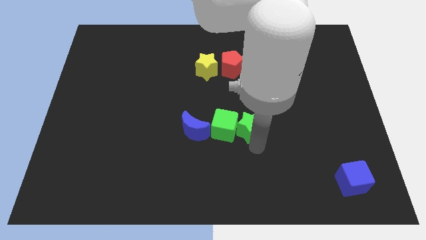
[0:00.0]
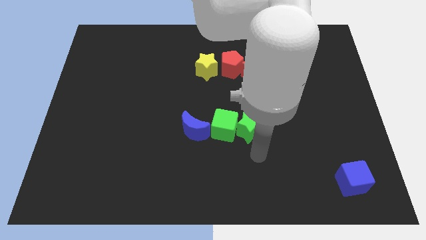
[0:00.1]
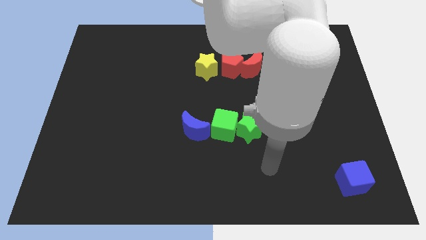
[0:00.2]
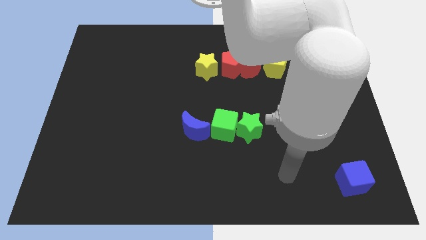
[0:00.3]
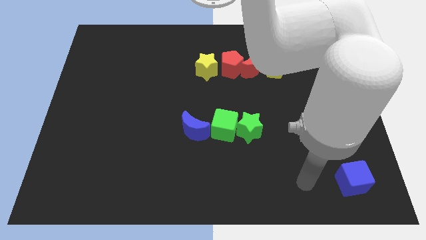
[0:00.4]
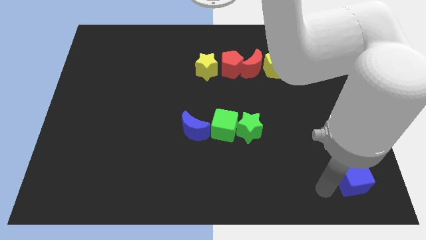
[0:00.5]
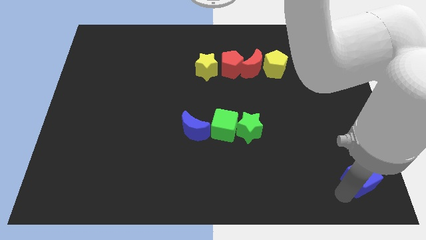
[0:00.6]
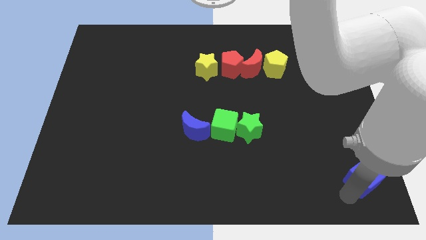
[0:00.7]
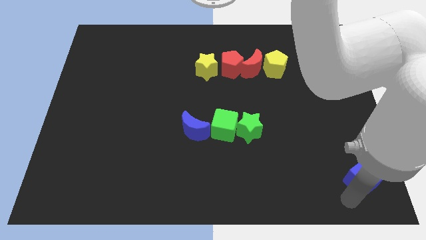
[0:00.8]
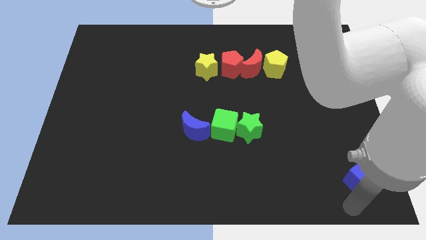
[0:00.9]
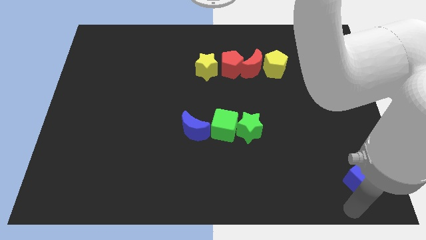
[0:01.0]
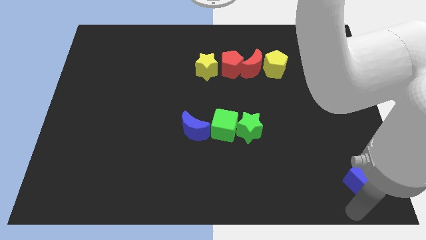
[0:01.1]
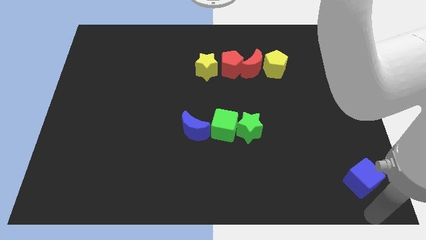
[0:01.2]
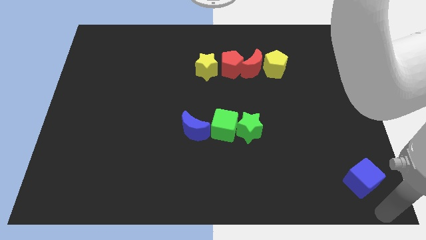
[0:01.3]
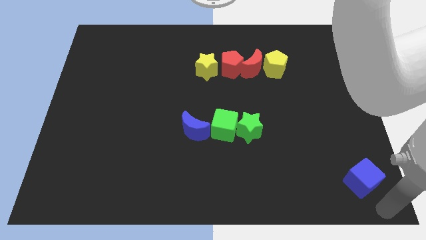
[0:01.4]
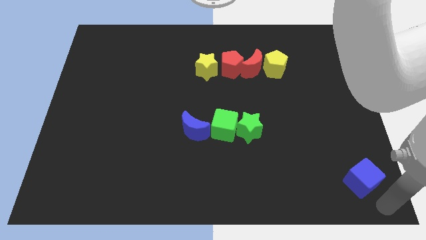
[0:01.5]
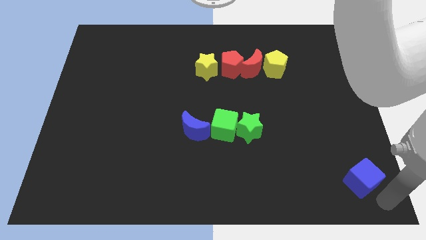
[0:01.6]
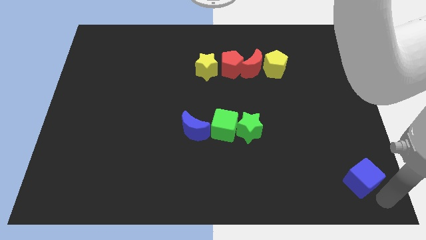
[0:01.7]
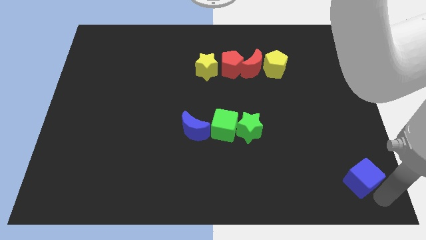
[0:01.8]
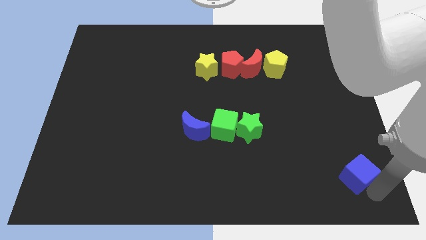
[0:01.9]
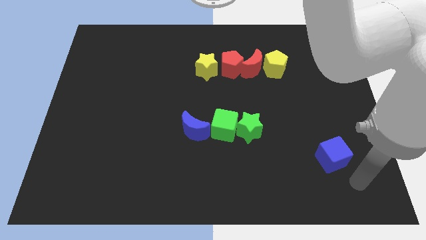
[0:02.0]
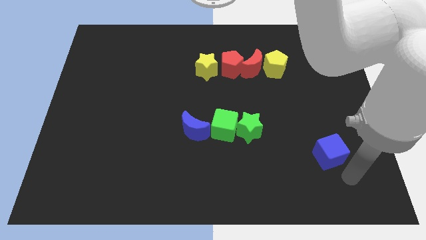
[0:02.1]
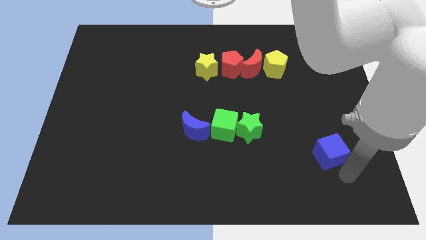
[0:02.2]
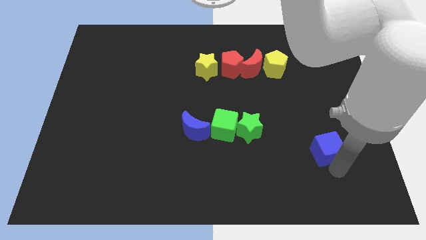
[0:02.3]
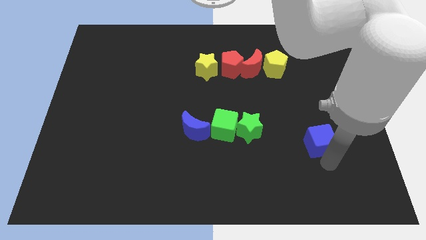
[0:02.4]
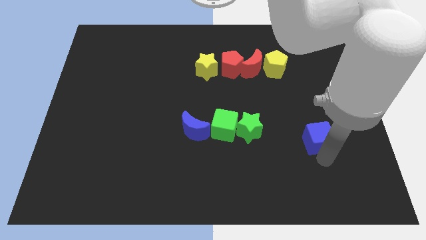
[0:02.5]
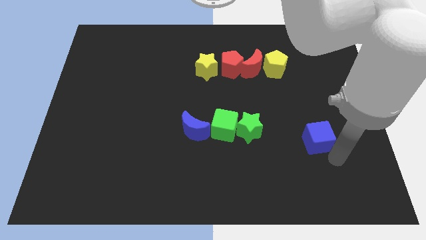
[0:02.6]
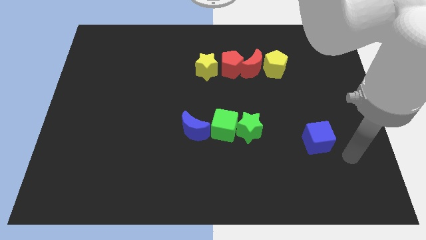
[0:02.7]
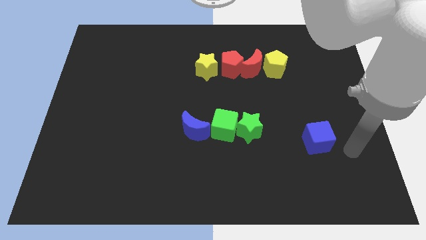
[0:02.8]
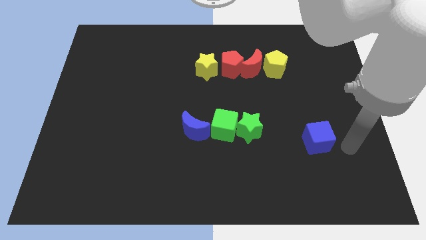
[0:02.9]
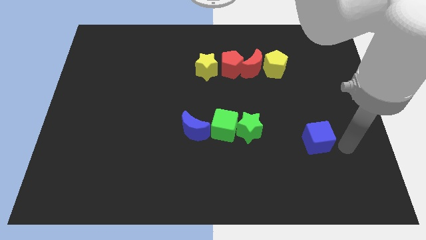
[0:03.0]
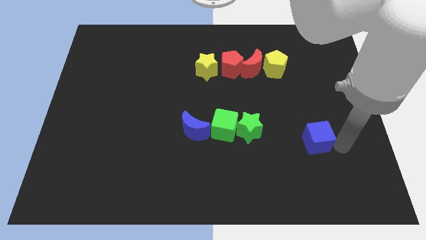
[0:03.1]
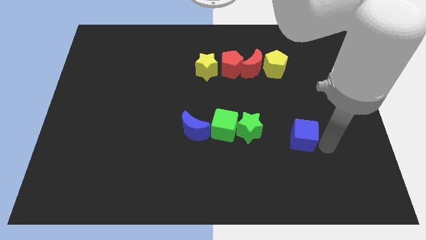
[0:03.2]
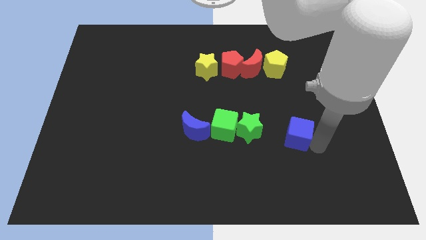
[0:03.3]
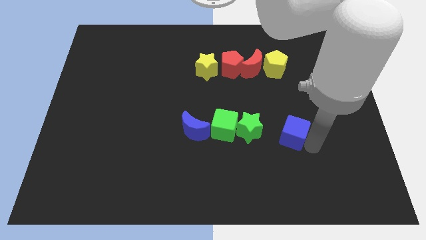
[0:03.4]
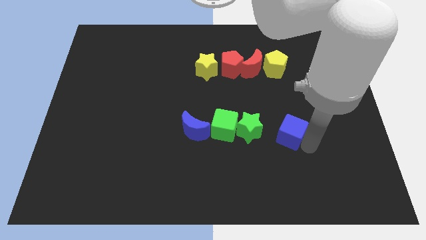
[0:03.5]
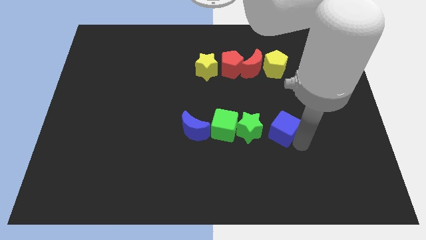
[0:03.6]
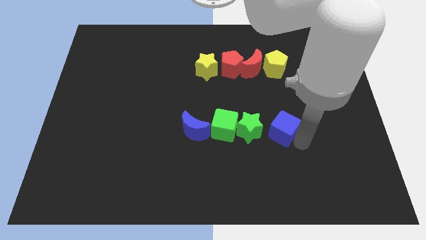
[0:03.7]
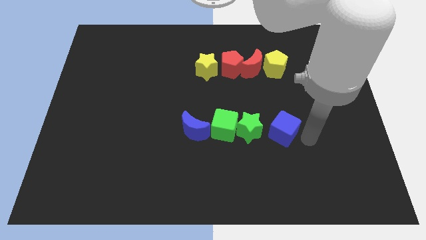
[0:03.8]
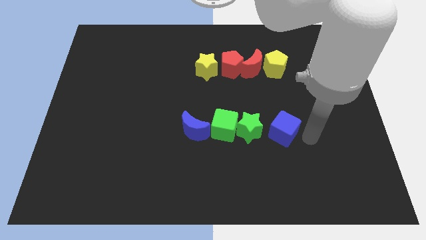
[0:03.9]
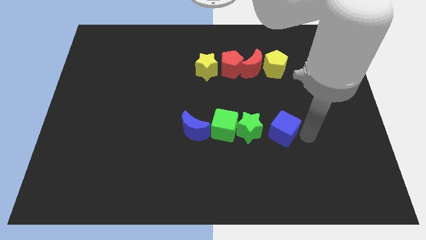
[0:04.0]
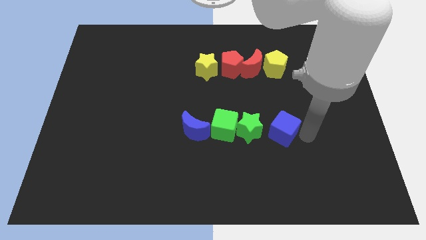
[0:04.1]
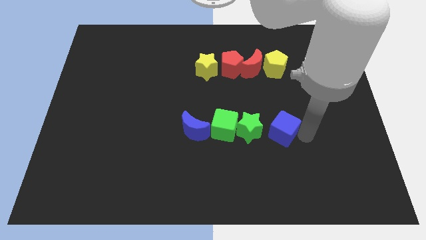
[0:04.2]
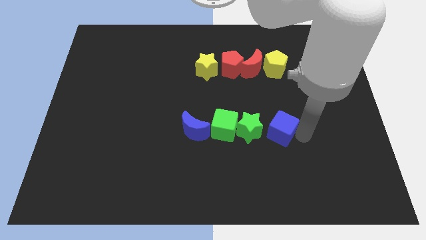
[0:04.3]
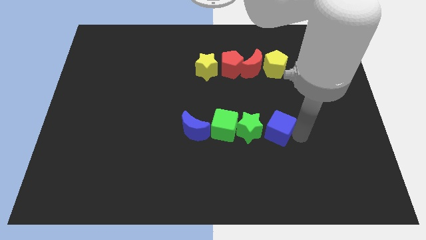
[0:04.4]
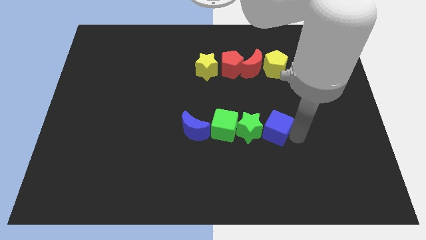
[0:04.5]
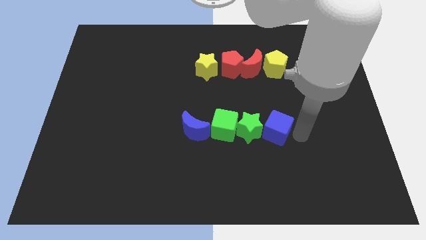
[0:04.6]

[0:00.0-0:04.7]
push the blue cube into the right side of the horizontal line of blocks

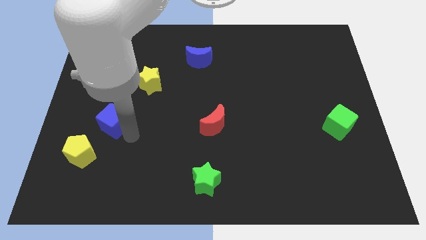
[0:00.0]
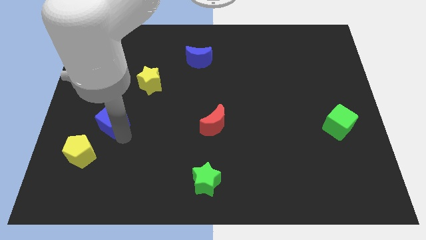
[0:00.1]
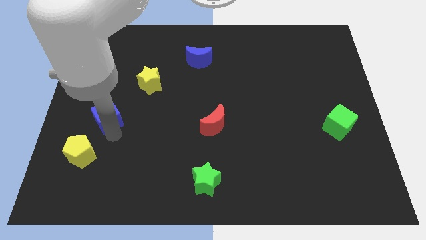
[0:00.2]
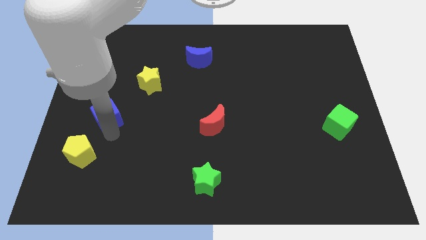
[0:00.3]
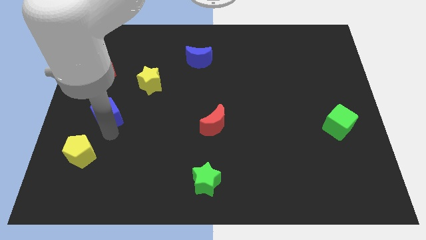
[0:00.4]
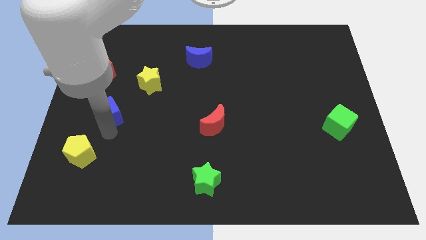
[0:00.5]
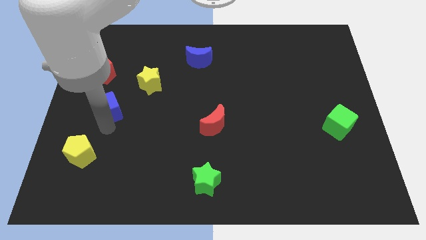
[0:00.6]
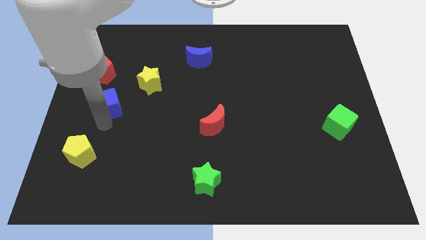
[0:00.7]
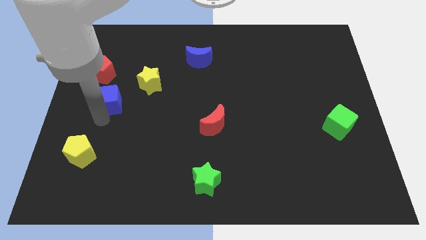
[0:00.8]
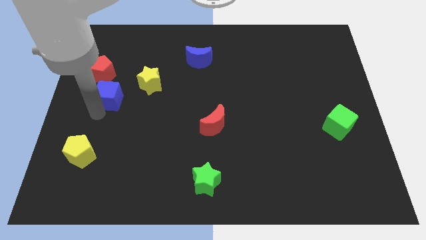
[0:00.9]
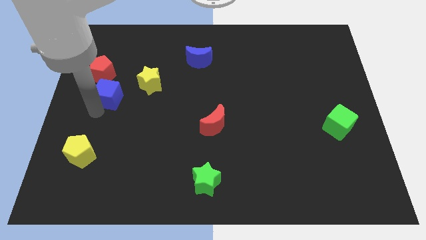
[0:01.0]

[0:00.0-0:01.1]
push blue cube towards red pentagon

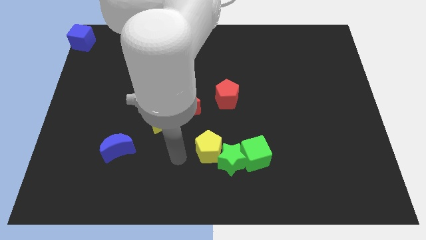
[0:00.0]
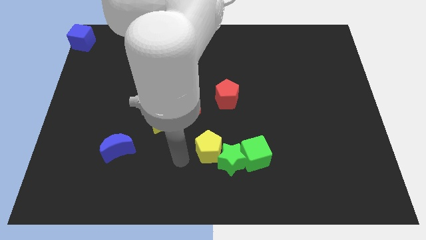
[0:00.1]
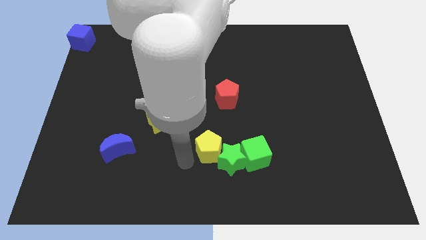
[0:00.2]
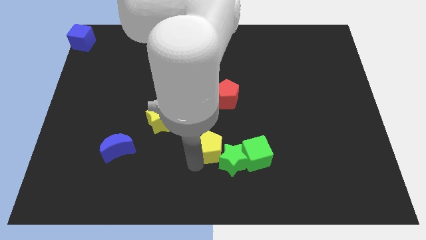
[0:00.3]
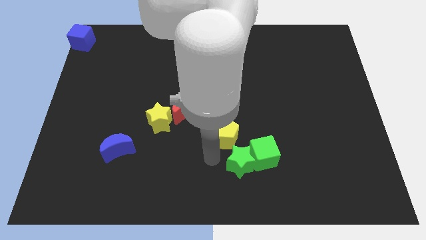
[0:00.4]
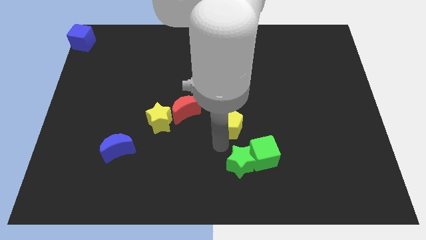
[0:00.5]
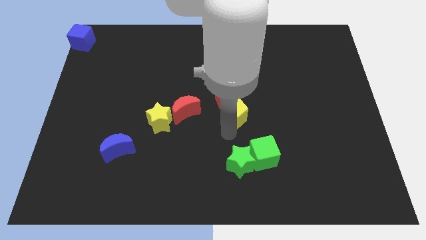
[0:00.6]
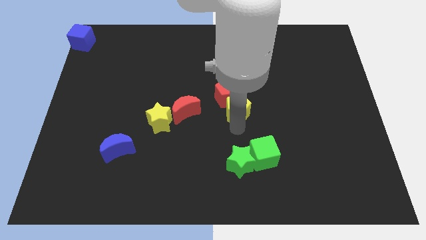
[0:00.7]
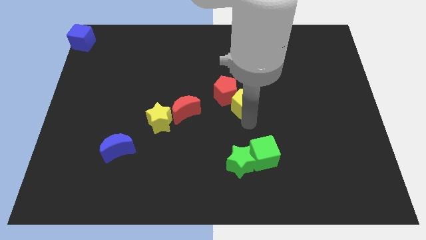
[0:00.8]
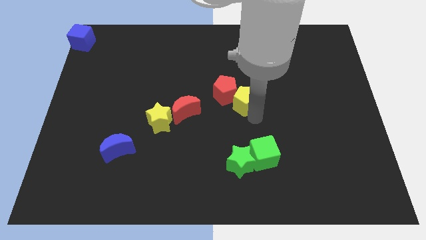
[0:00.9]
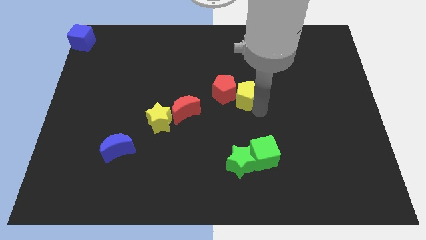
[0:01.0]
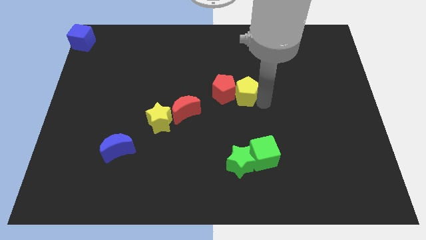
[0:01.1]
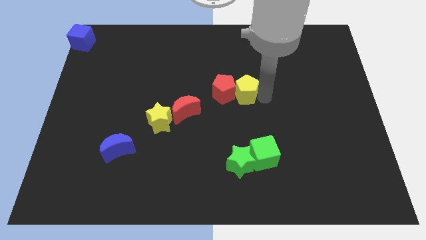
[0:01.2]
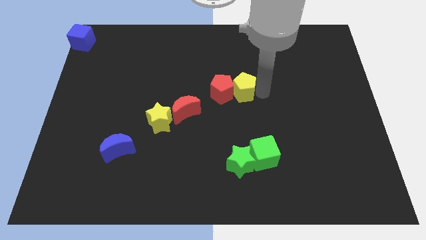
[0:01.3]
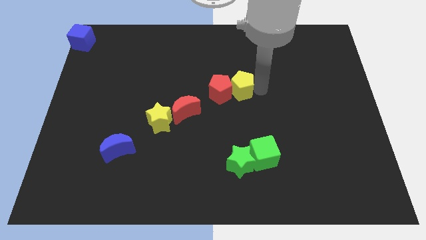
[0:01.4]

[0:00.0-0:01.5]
push the yellow pentagon to right side of the red pentagon

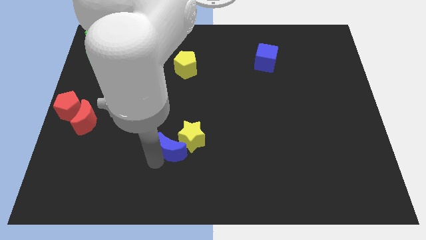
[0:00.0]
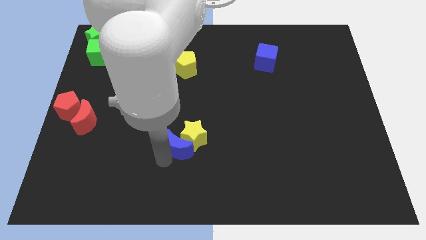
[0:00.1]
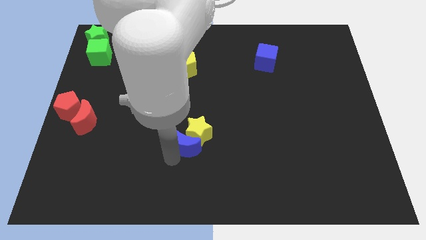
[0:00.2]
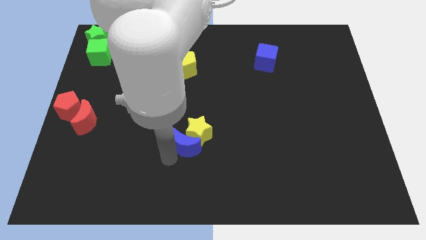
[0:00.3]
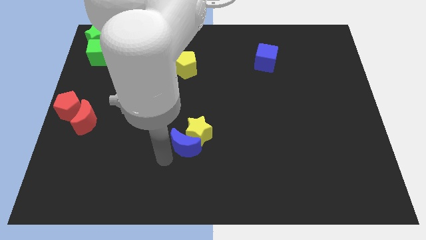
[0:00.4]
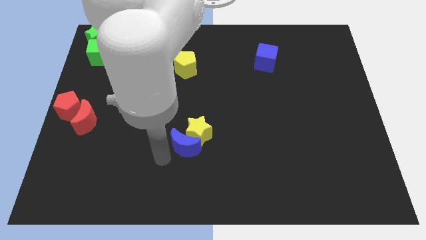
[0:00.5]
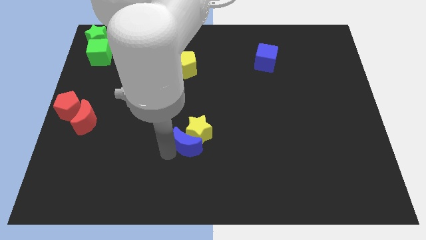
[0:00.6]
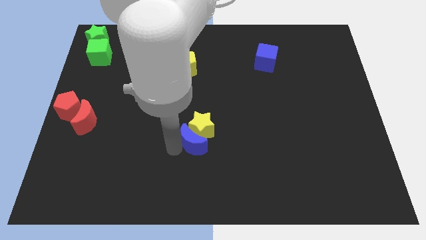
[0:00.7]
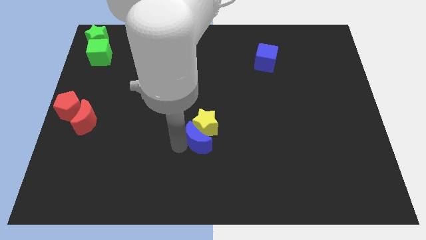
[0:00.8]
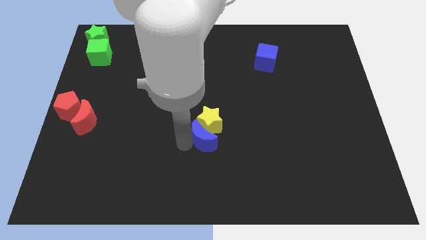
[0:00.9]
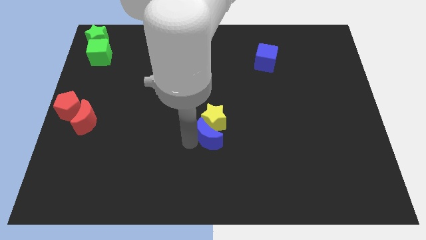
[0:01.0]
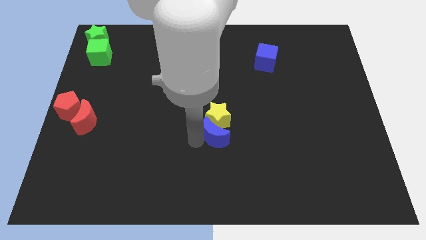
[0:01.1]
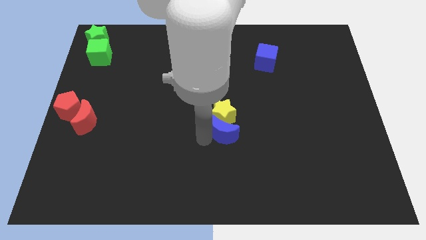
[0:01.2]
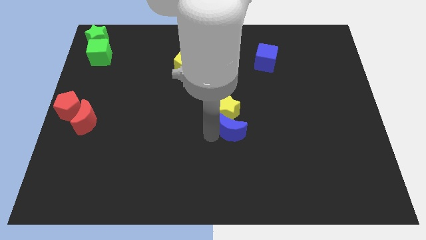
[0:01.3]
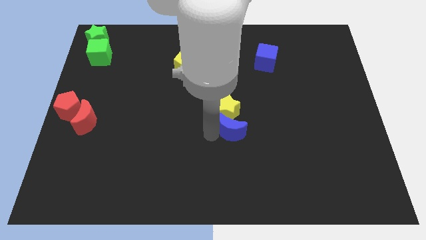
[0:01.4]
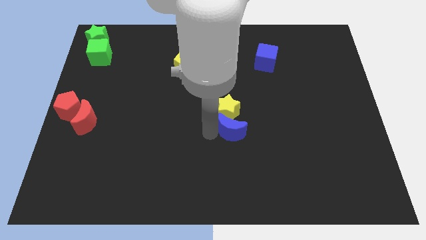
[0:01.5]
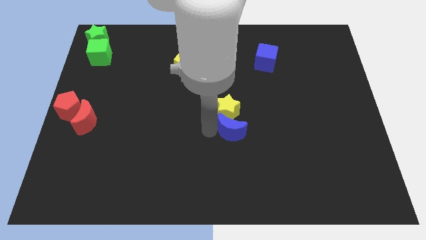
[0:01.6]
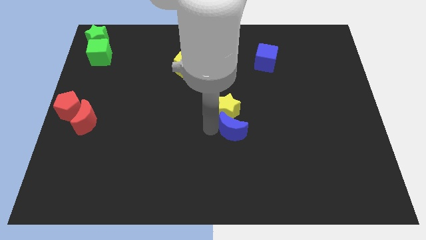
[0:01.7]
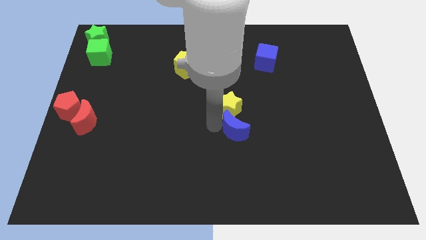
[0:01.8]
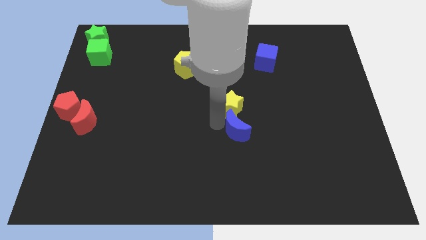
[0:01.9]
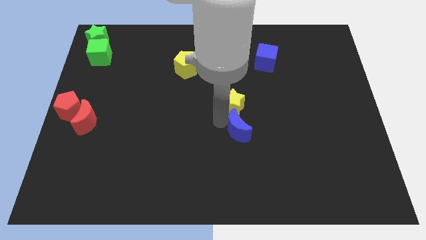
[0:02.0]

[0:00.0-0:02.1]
push the yellow star with the blue crescent
